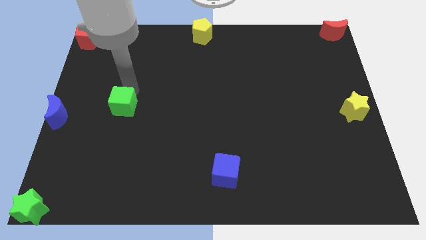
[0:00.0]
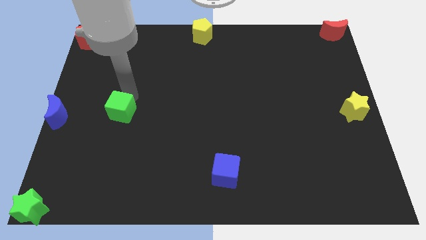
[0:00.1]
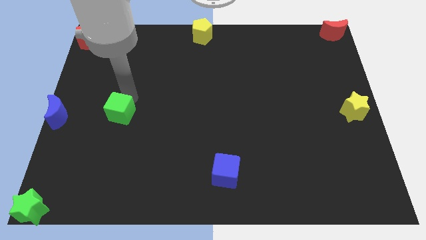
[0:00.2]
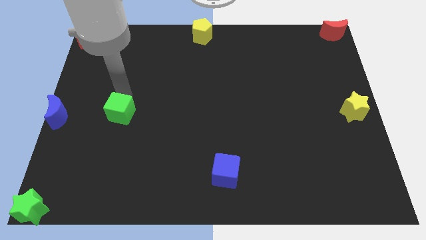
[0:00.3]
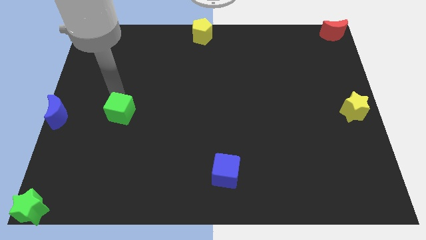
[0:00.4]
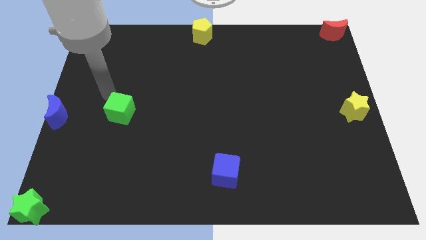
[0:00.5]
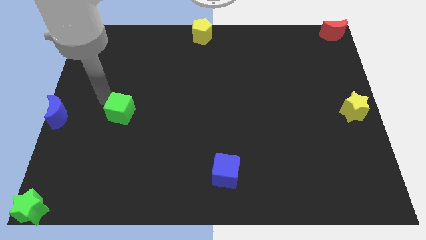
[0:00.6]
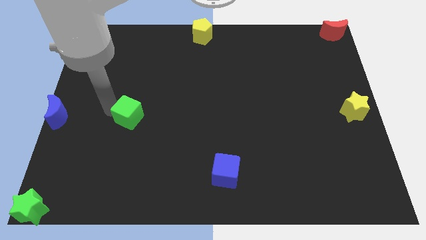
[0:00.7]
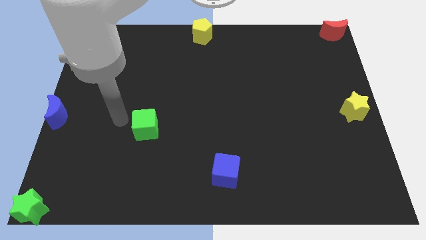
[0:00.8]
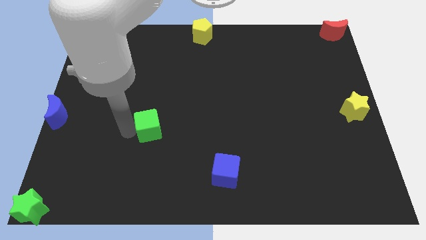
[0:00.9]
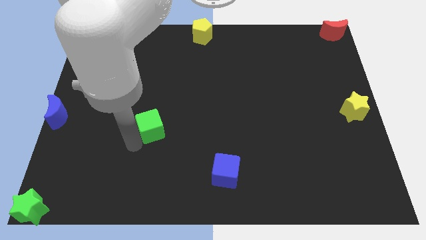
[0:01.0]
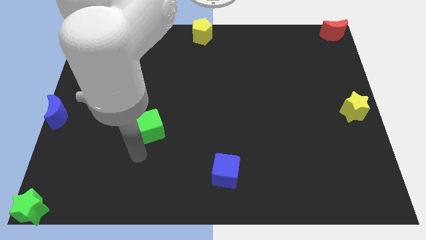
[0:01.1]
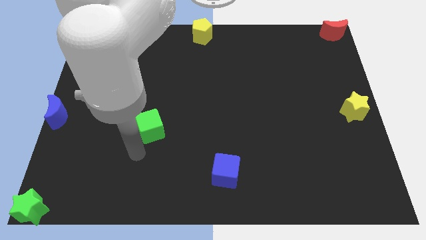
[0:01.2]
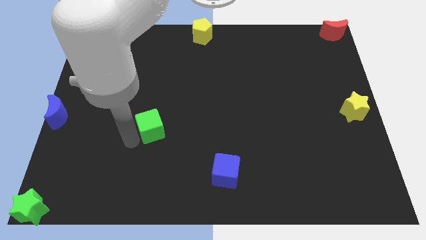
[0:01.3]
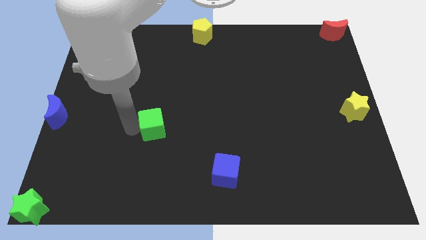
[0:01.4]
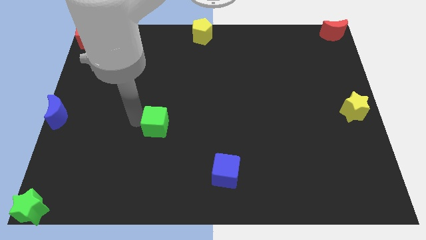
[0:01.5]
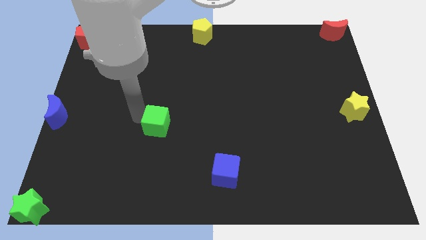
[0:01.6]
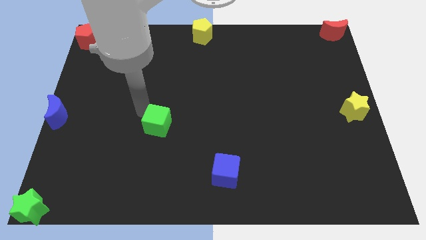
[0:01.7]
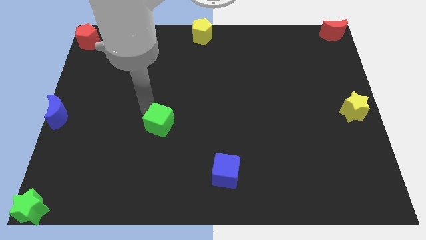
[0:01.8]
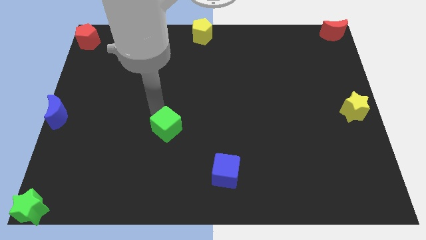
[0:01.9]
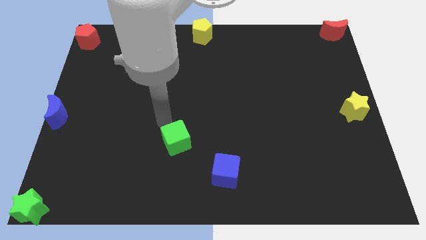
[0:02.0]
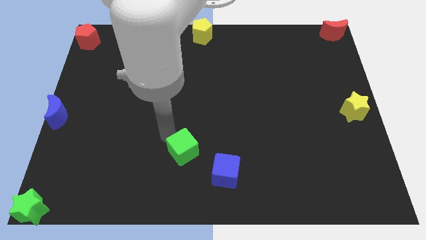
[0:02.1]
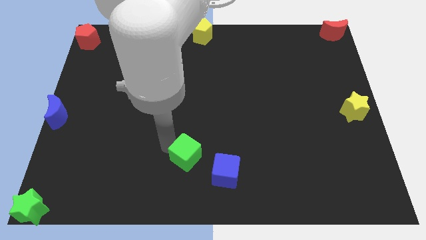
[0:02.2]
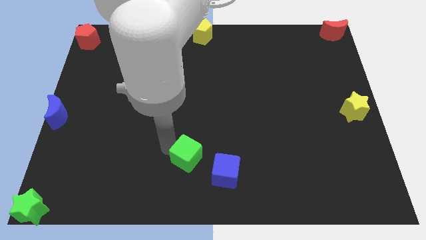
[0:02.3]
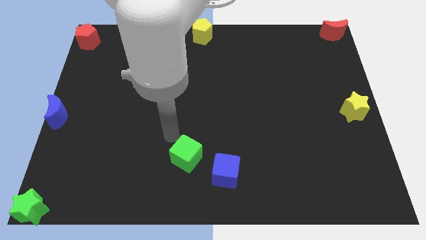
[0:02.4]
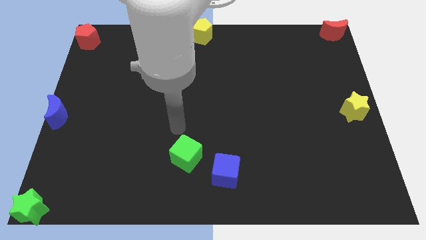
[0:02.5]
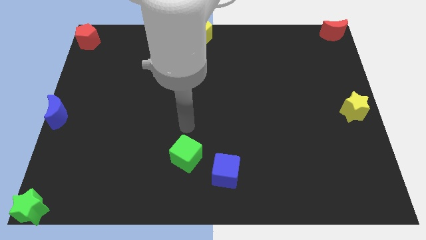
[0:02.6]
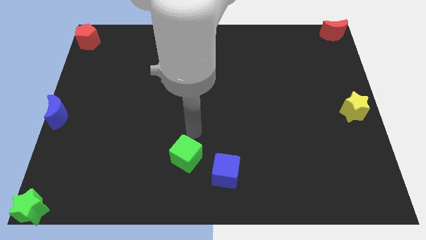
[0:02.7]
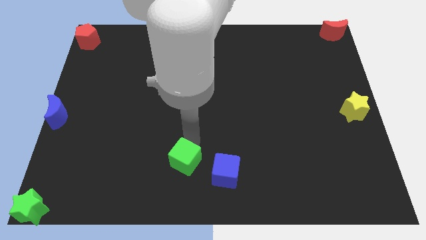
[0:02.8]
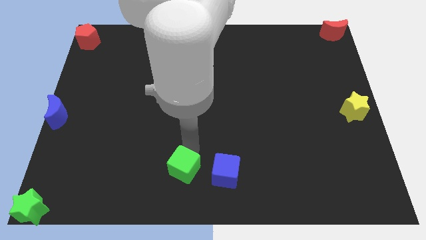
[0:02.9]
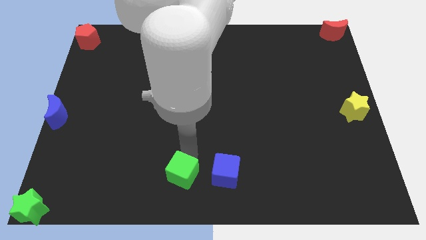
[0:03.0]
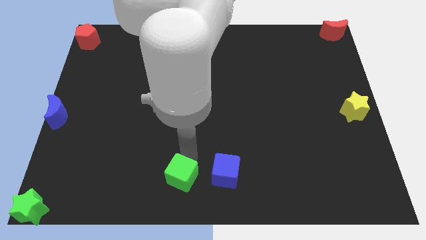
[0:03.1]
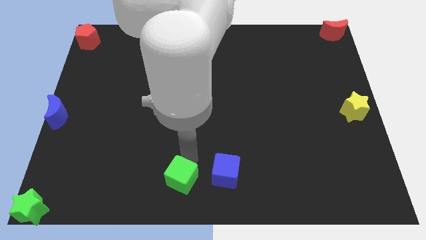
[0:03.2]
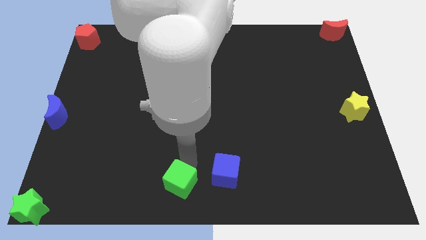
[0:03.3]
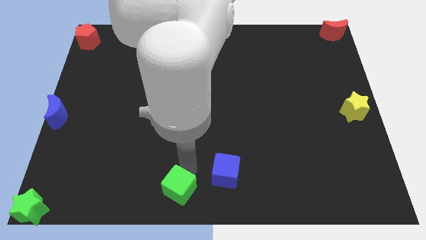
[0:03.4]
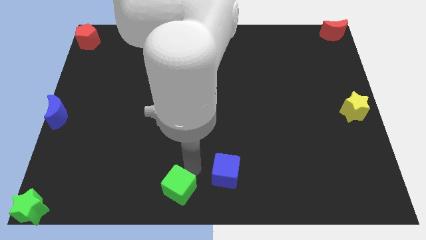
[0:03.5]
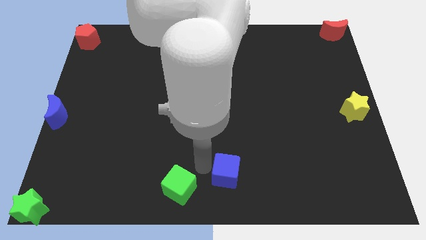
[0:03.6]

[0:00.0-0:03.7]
push the green cube to the bottom center of the board

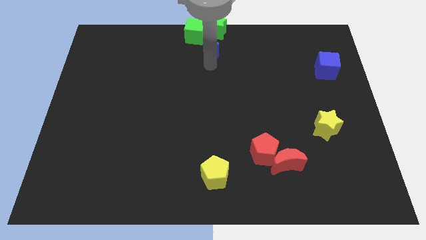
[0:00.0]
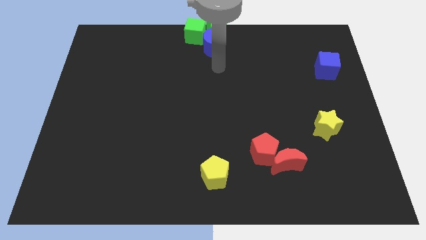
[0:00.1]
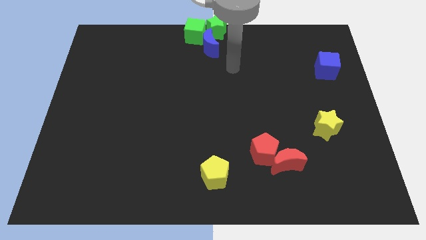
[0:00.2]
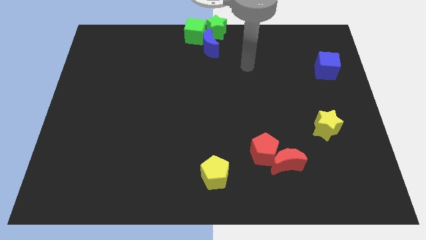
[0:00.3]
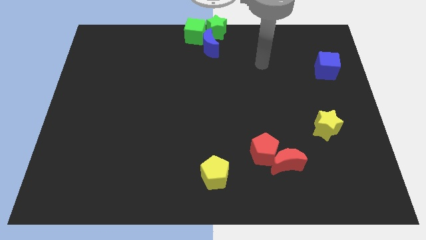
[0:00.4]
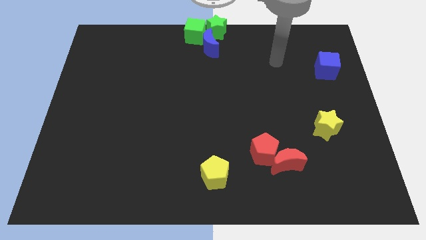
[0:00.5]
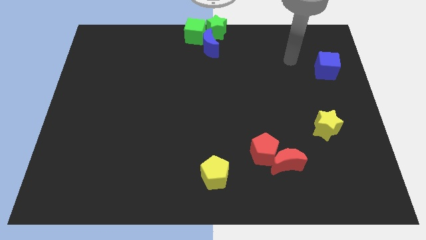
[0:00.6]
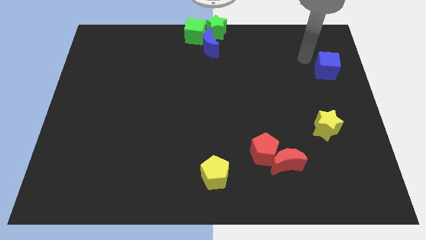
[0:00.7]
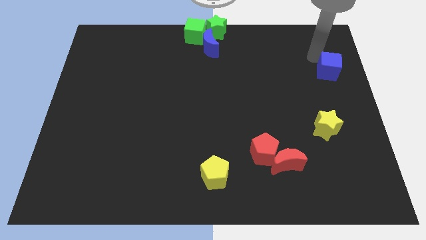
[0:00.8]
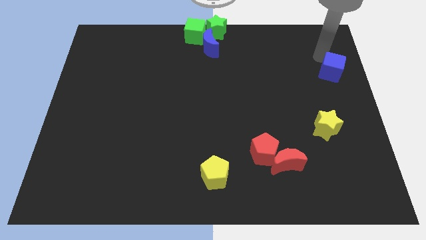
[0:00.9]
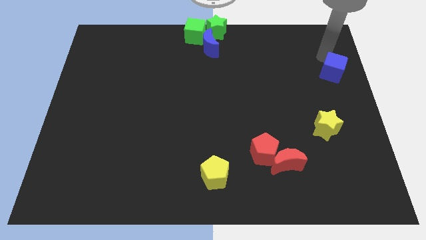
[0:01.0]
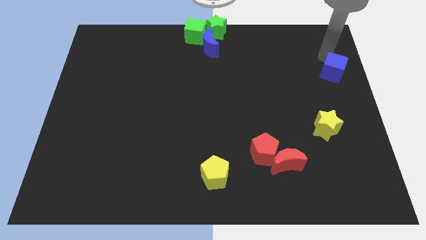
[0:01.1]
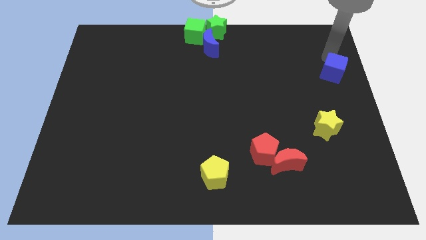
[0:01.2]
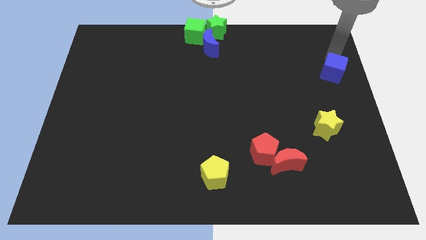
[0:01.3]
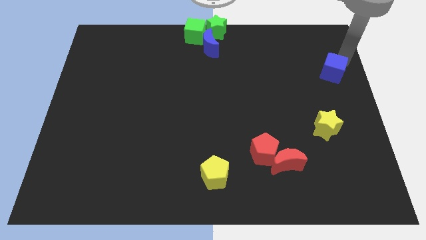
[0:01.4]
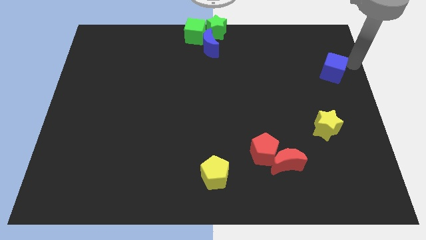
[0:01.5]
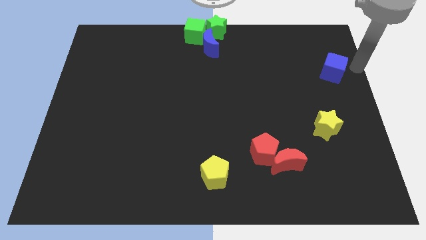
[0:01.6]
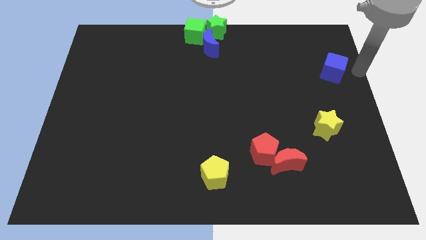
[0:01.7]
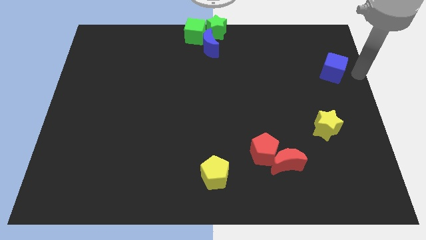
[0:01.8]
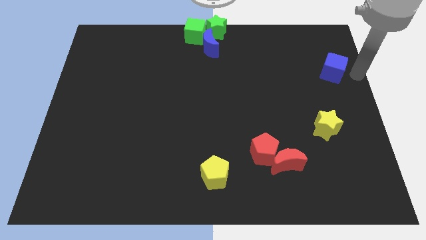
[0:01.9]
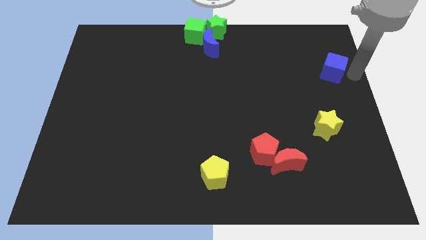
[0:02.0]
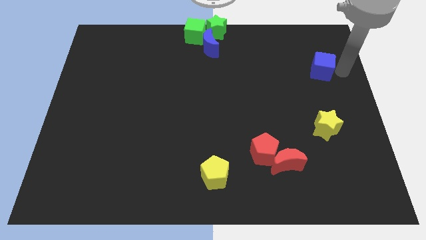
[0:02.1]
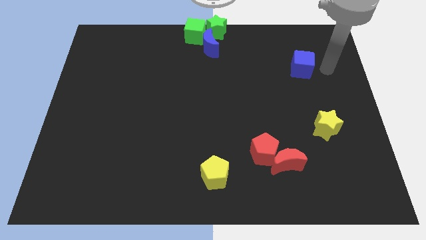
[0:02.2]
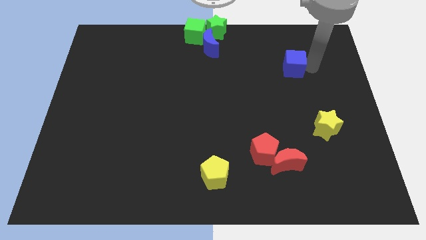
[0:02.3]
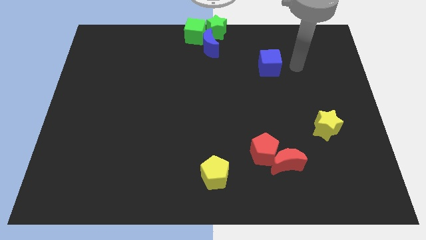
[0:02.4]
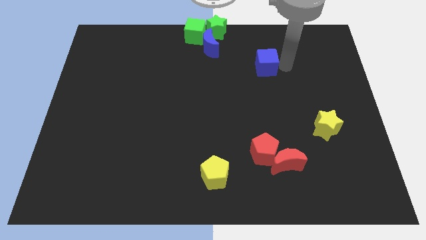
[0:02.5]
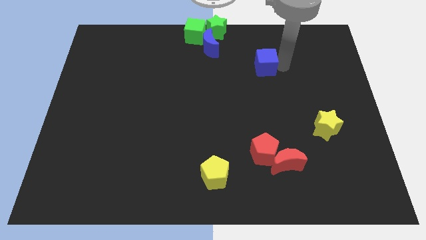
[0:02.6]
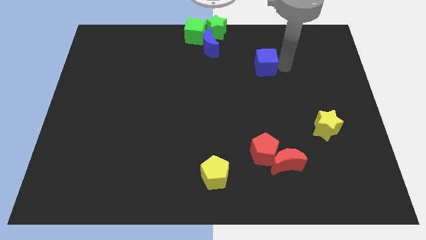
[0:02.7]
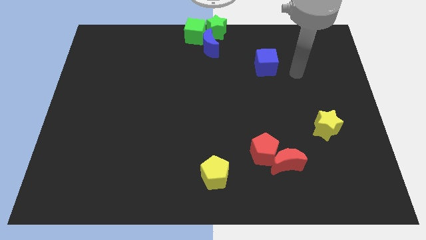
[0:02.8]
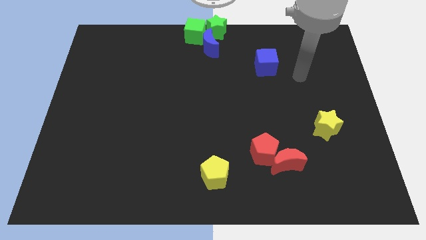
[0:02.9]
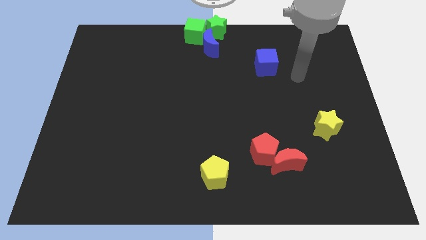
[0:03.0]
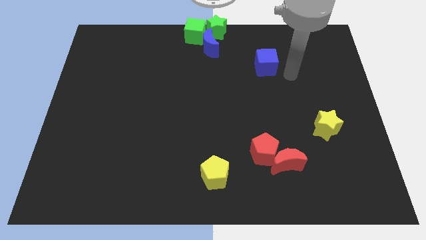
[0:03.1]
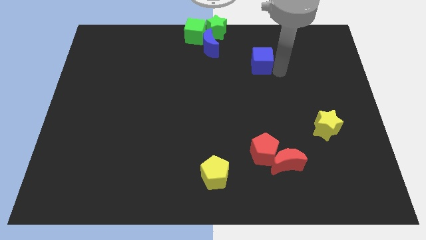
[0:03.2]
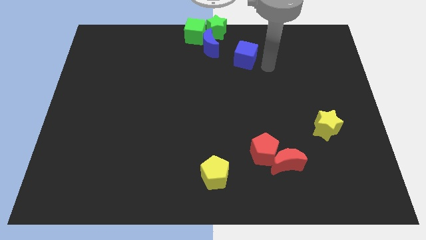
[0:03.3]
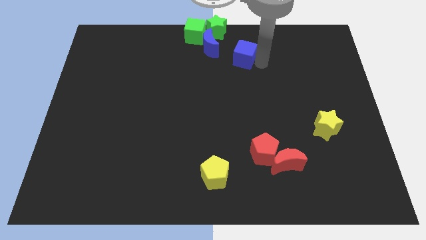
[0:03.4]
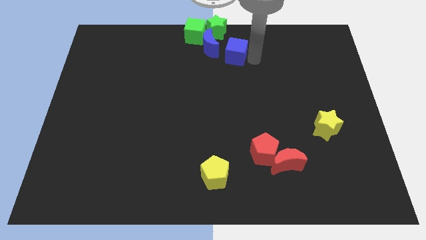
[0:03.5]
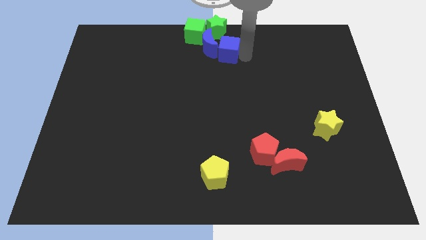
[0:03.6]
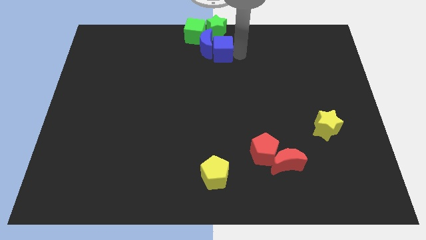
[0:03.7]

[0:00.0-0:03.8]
move the blue cube to the right of the blue crescent

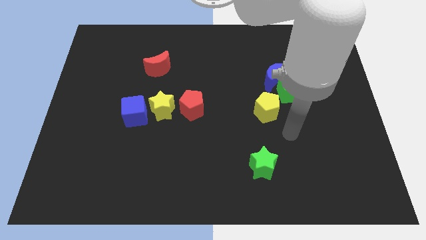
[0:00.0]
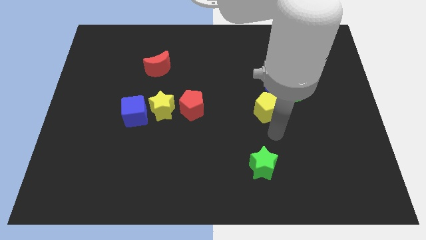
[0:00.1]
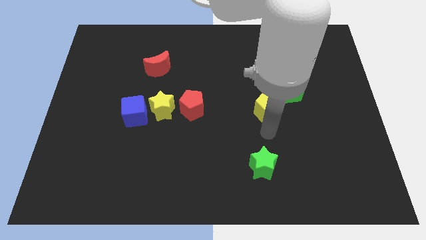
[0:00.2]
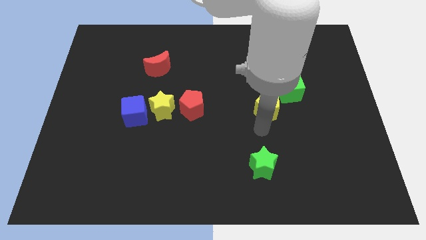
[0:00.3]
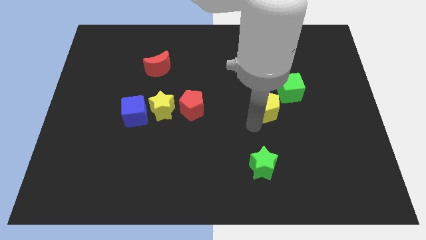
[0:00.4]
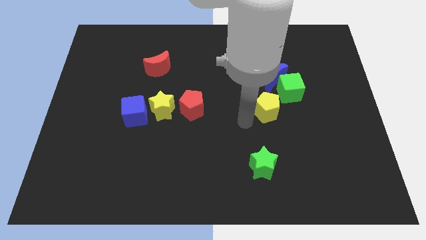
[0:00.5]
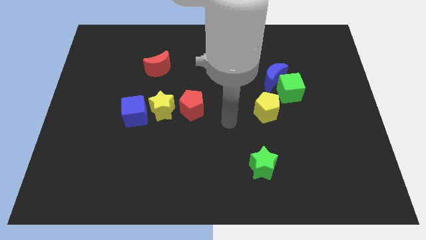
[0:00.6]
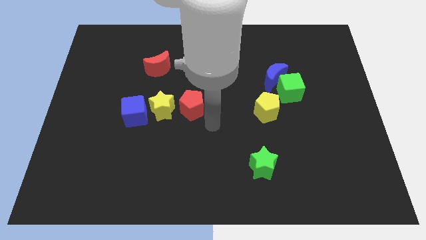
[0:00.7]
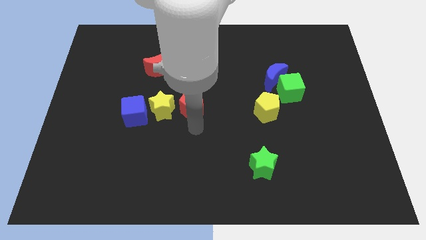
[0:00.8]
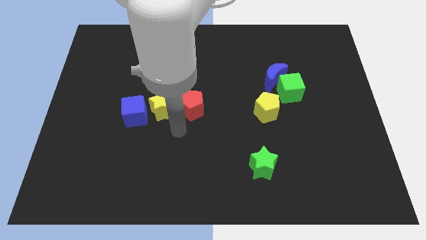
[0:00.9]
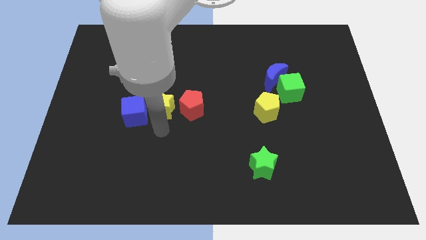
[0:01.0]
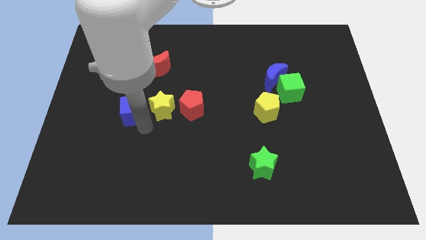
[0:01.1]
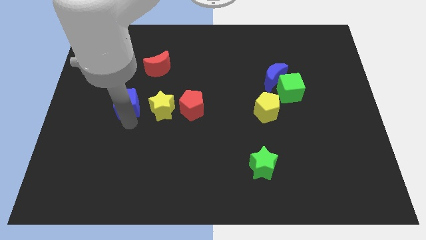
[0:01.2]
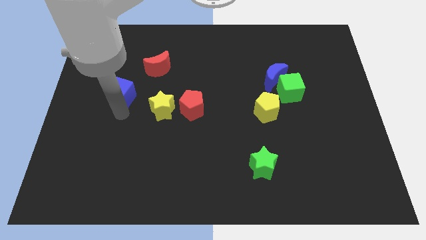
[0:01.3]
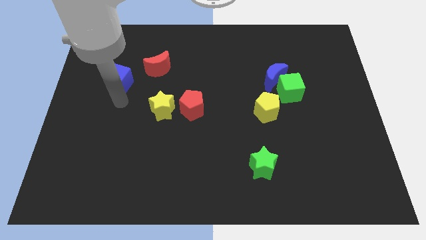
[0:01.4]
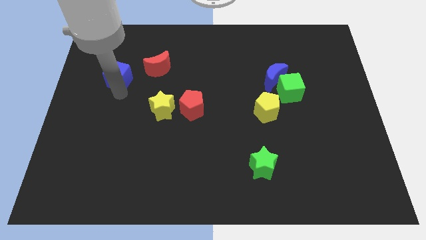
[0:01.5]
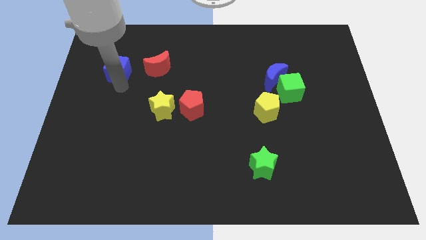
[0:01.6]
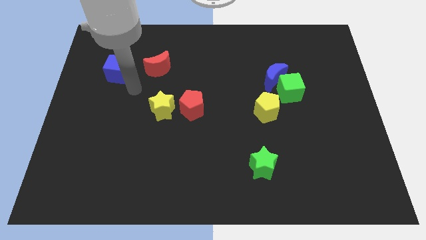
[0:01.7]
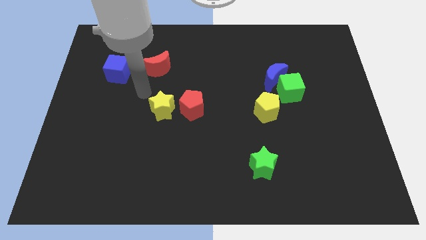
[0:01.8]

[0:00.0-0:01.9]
place the blue cube at the left side of the red moon
